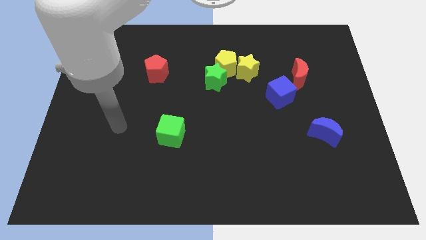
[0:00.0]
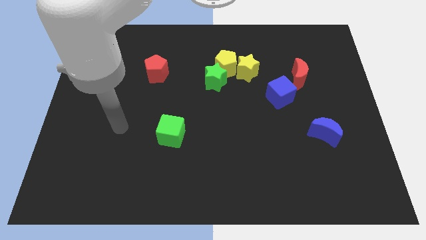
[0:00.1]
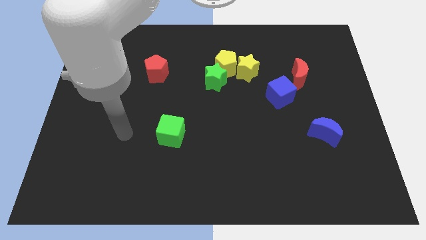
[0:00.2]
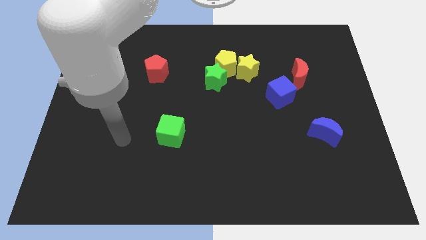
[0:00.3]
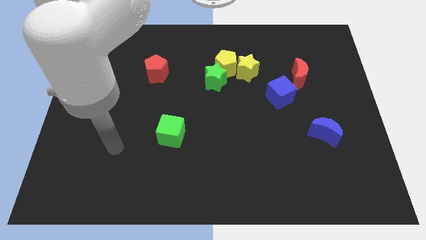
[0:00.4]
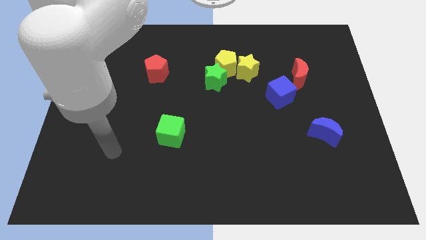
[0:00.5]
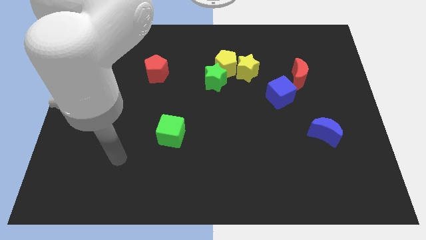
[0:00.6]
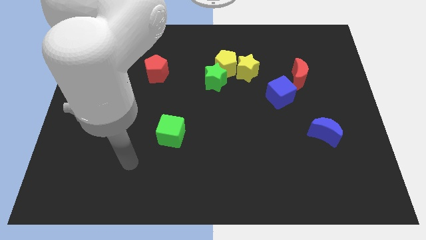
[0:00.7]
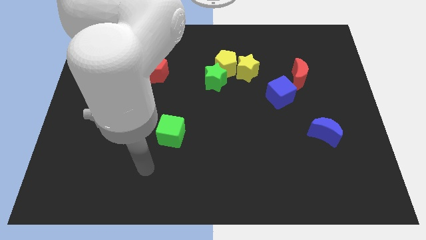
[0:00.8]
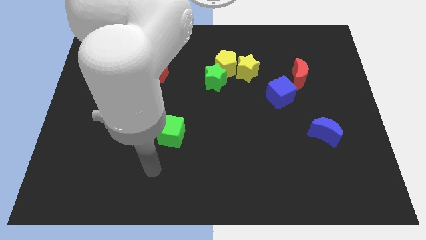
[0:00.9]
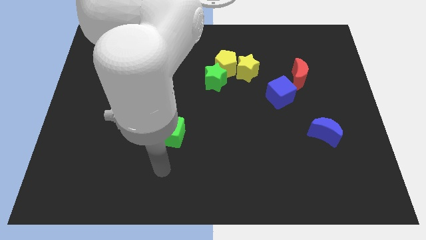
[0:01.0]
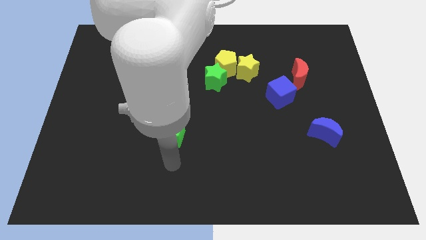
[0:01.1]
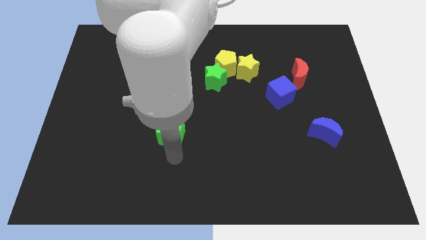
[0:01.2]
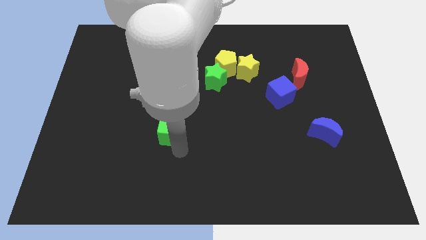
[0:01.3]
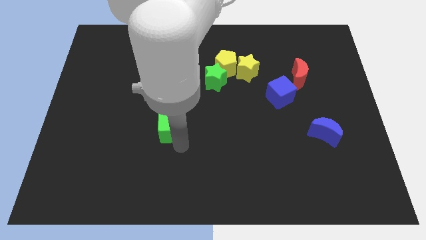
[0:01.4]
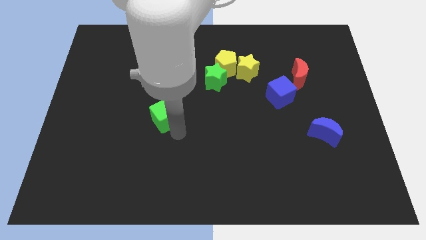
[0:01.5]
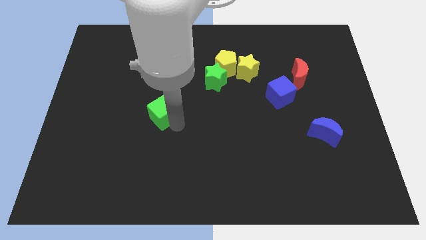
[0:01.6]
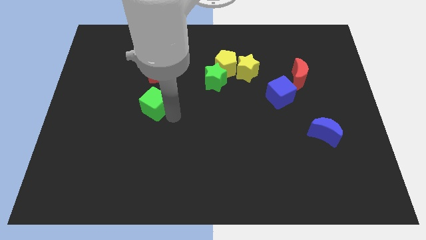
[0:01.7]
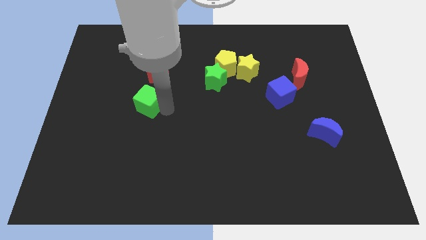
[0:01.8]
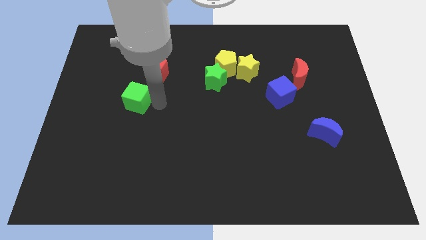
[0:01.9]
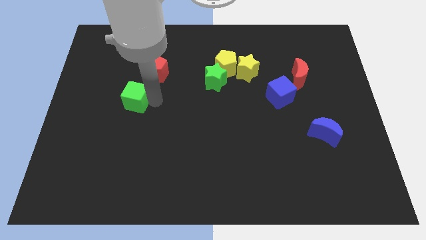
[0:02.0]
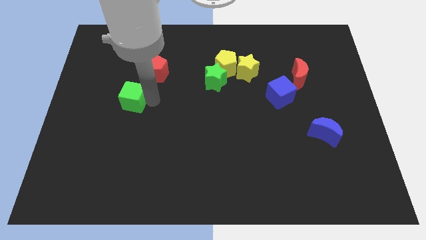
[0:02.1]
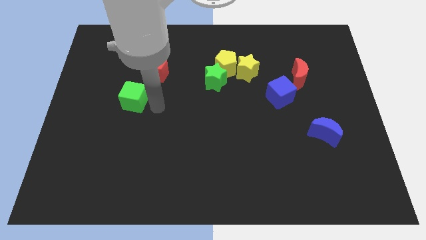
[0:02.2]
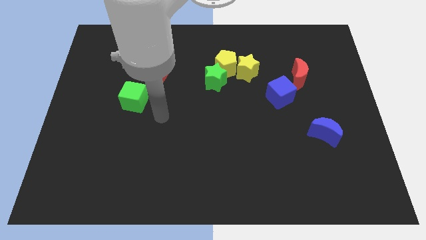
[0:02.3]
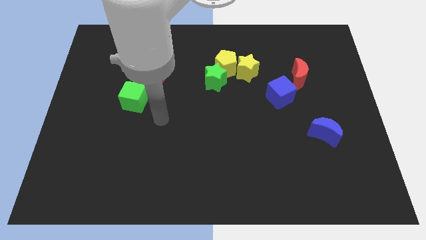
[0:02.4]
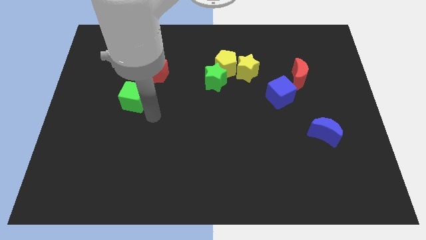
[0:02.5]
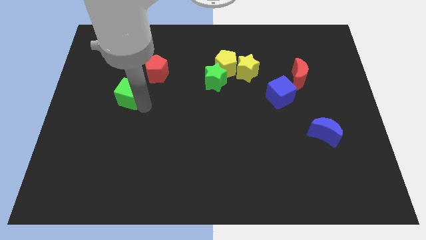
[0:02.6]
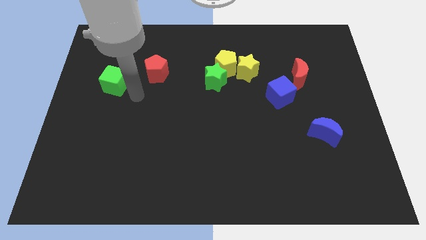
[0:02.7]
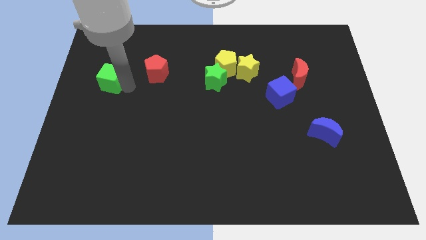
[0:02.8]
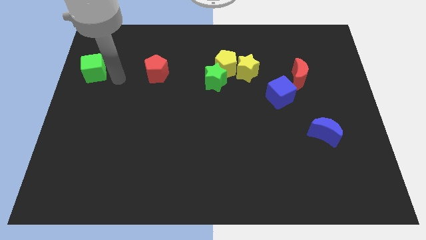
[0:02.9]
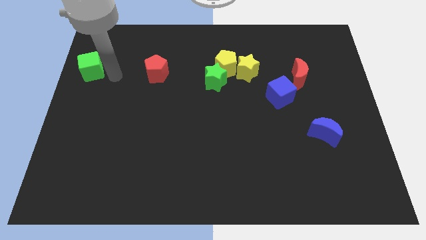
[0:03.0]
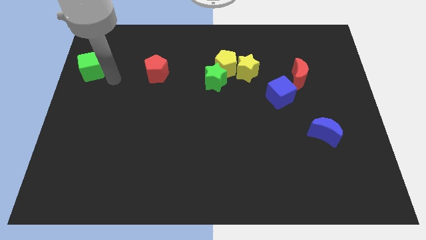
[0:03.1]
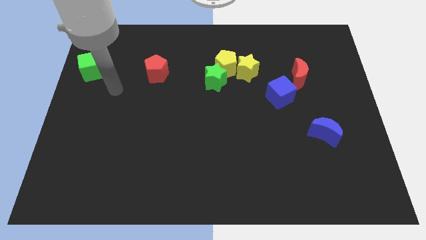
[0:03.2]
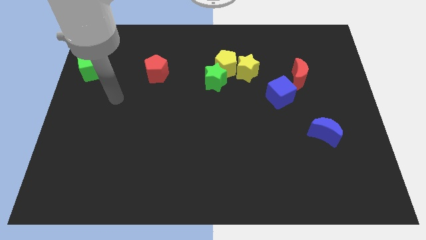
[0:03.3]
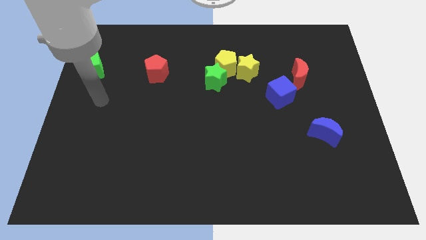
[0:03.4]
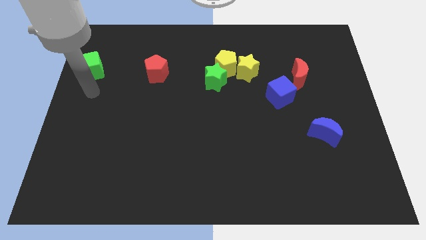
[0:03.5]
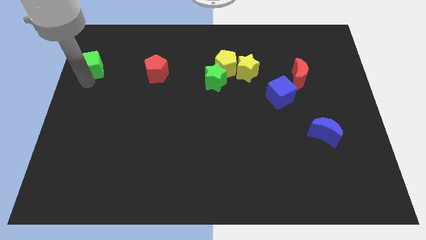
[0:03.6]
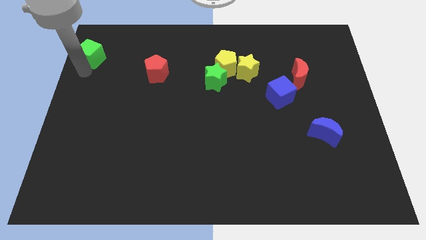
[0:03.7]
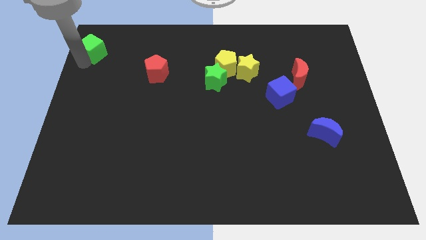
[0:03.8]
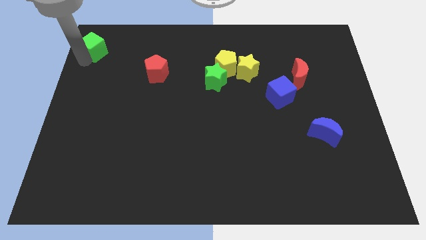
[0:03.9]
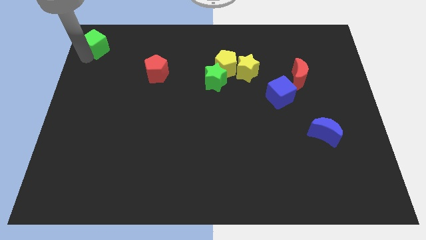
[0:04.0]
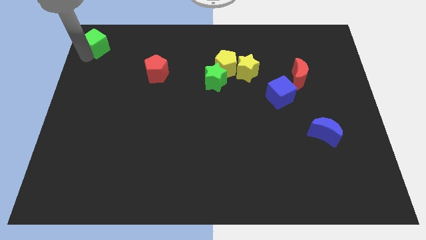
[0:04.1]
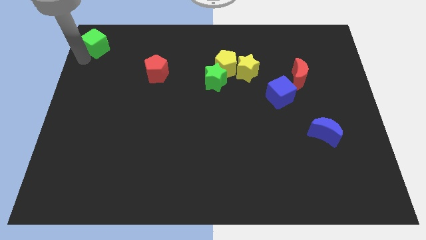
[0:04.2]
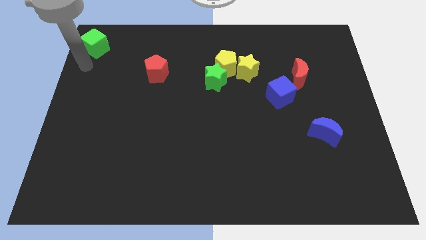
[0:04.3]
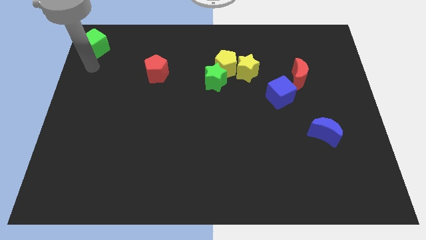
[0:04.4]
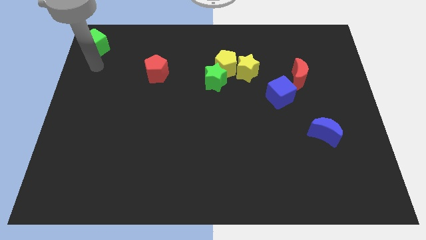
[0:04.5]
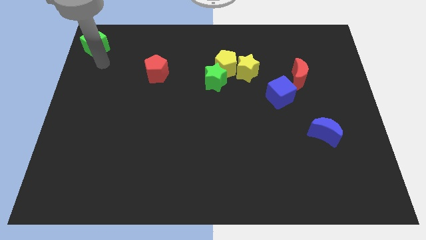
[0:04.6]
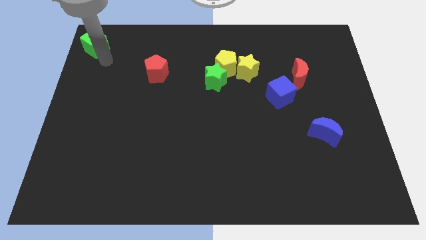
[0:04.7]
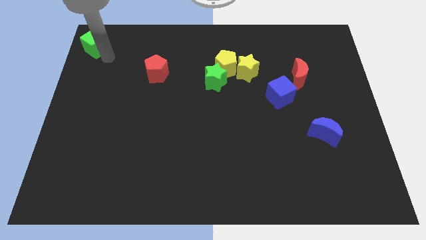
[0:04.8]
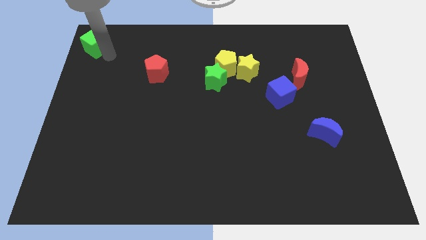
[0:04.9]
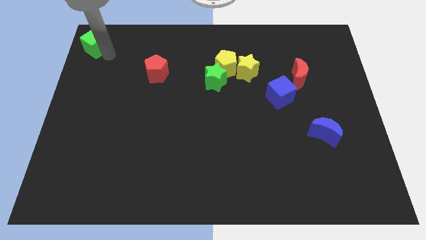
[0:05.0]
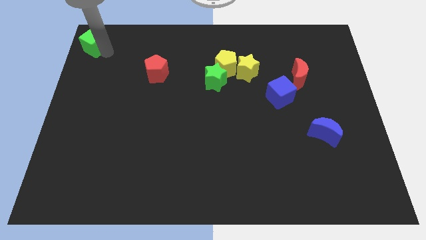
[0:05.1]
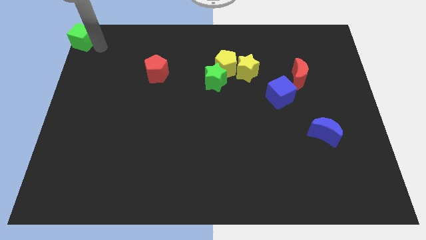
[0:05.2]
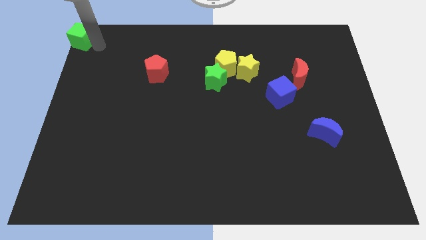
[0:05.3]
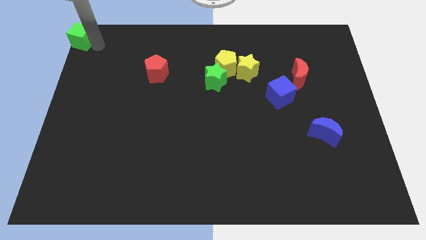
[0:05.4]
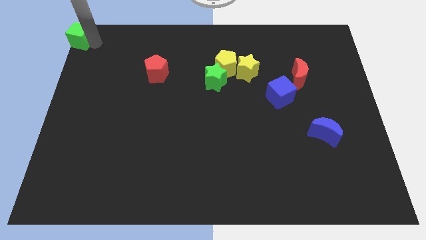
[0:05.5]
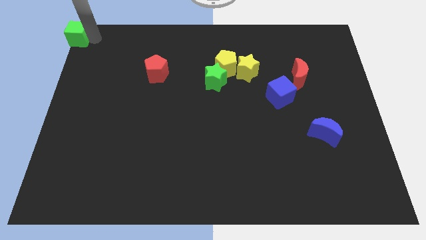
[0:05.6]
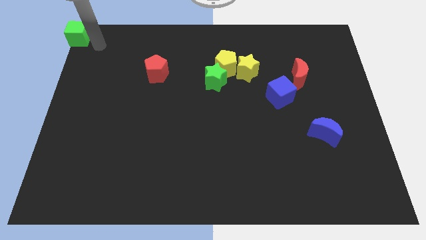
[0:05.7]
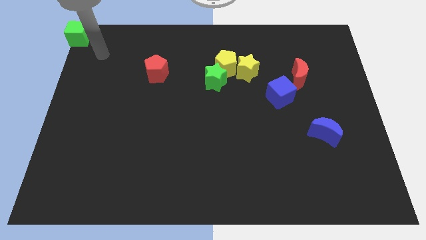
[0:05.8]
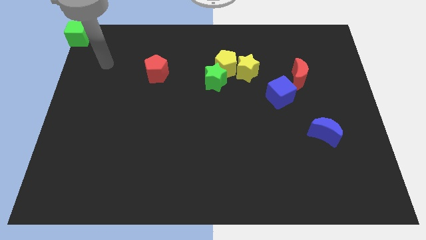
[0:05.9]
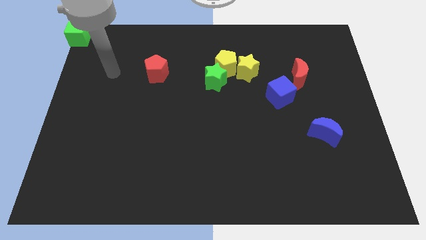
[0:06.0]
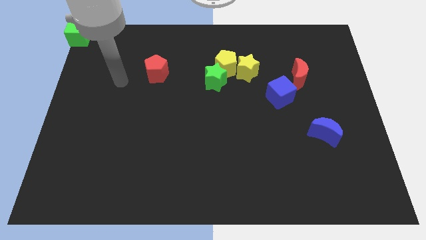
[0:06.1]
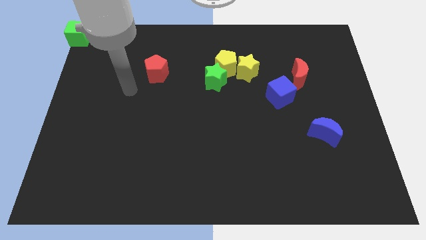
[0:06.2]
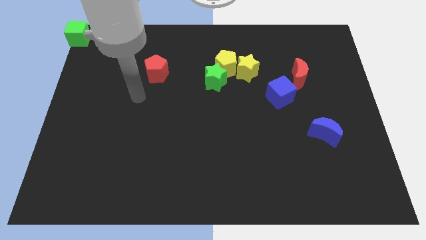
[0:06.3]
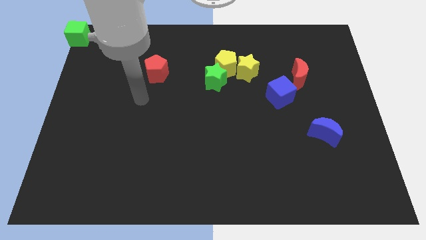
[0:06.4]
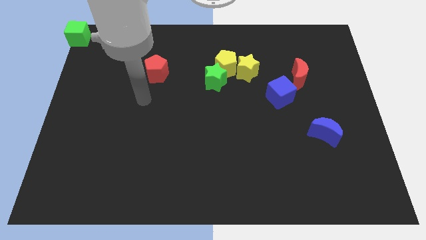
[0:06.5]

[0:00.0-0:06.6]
move the green cube to top left corner of the board

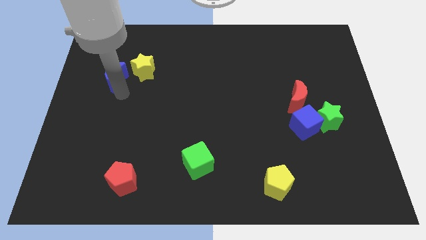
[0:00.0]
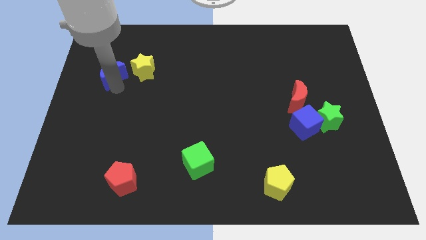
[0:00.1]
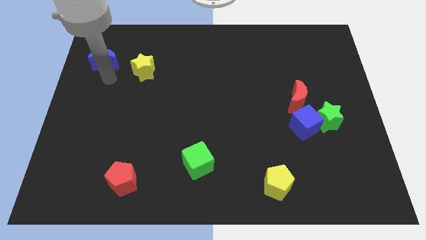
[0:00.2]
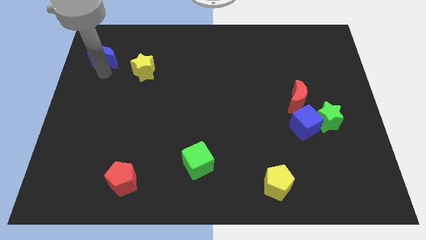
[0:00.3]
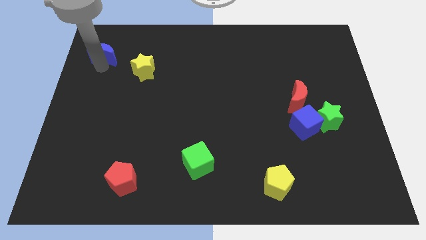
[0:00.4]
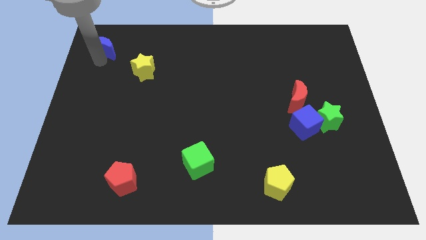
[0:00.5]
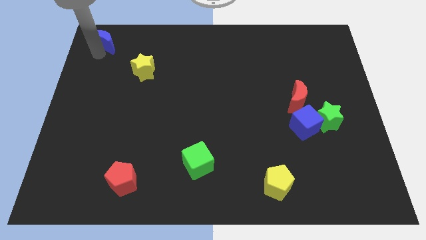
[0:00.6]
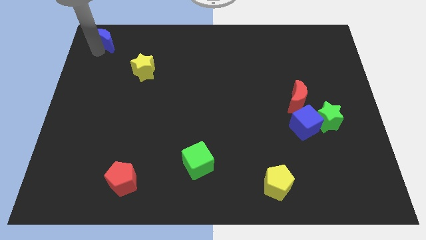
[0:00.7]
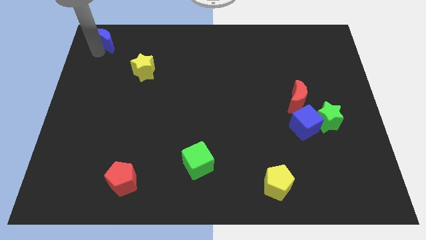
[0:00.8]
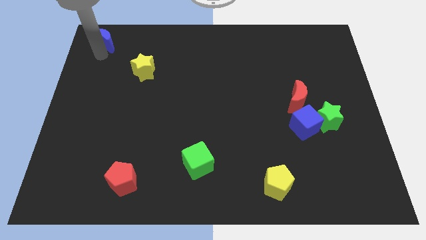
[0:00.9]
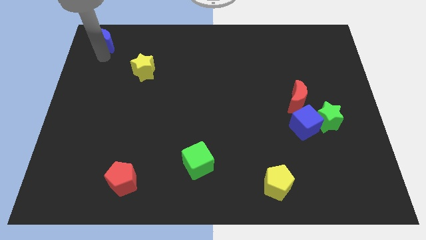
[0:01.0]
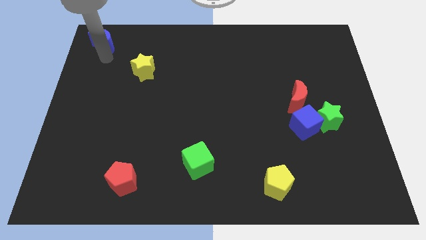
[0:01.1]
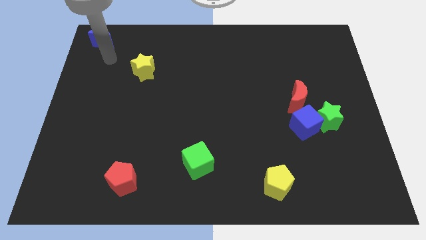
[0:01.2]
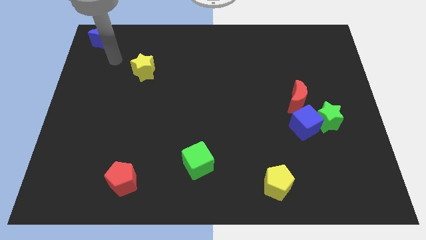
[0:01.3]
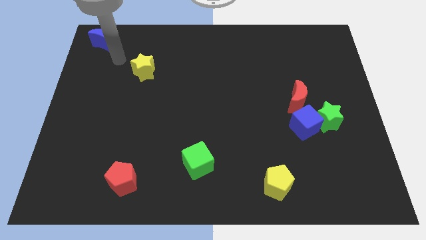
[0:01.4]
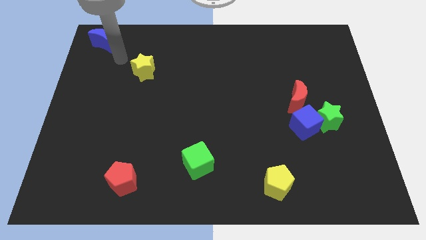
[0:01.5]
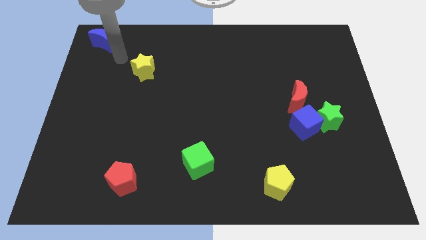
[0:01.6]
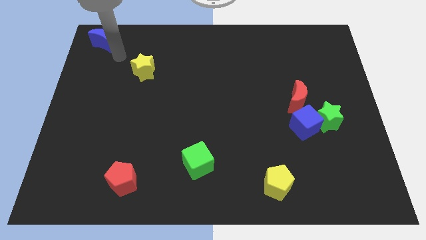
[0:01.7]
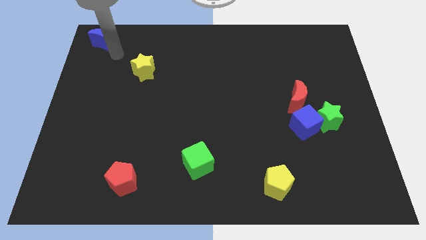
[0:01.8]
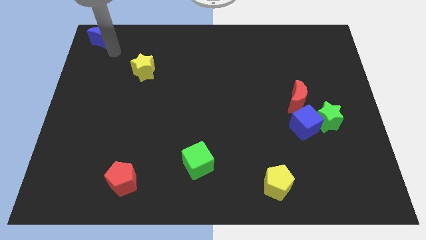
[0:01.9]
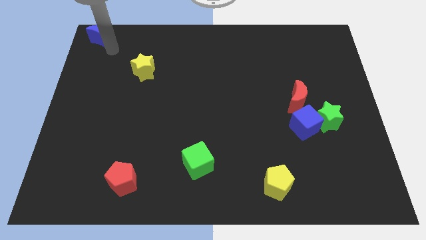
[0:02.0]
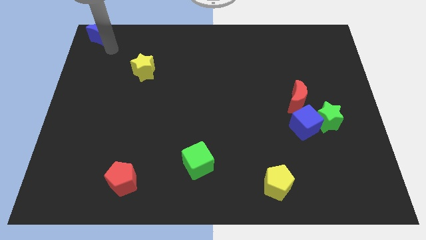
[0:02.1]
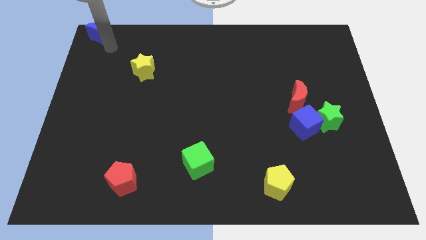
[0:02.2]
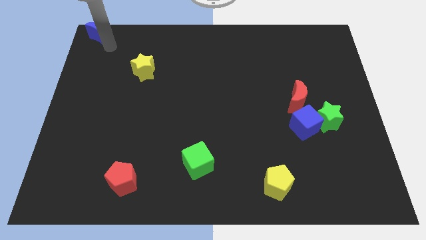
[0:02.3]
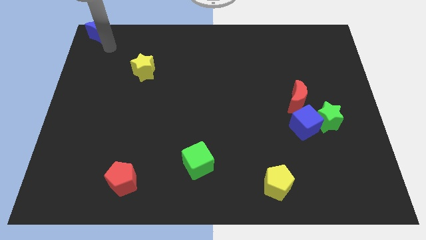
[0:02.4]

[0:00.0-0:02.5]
put the blue moon diagonally to yellow star
